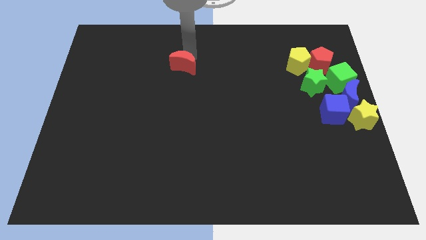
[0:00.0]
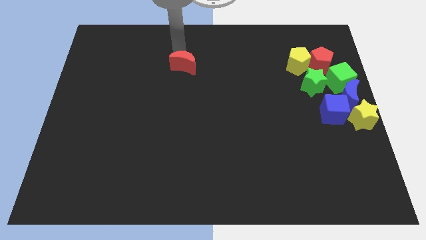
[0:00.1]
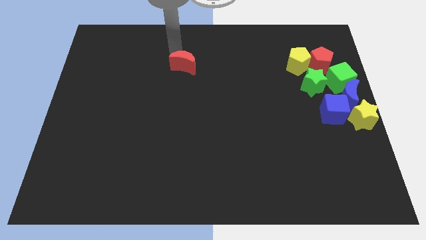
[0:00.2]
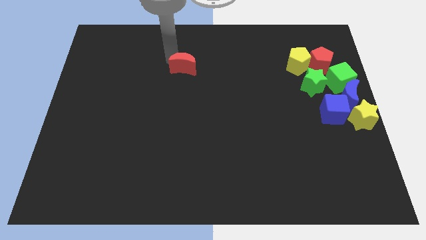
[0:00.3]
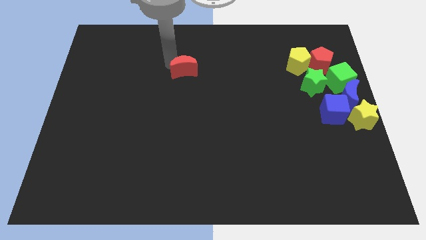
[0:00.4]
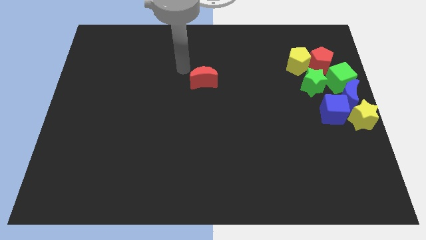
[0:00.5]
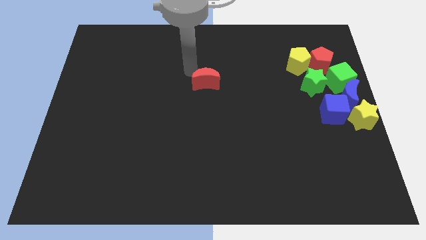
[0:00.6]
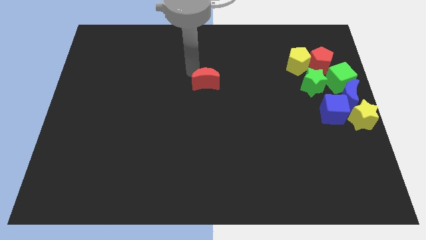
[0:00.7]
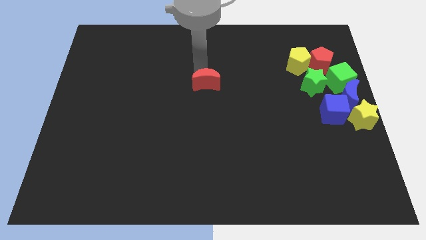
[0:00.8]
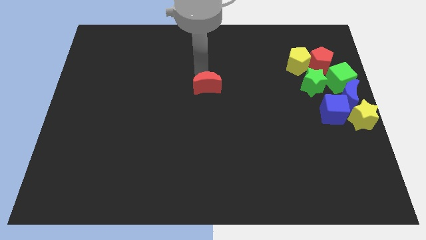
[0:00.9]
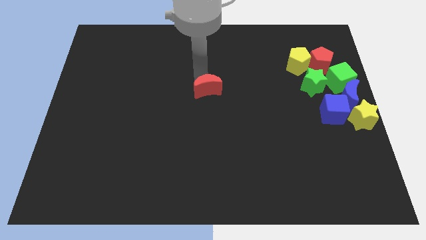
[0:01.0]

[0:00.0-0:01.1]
move the red moon to the center

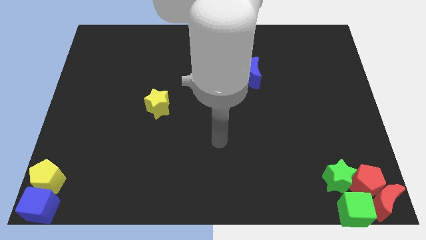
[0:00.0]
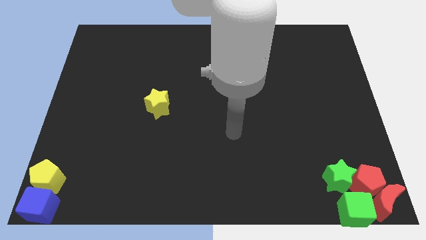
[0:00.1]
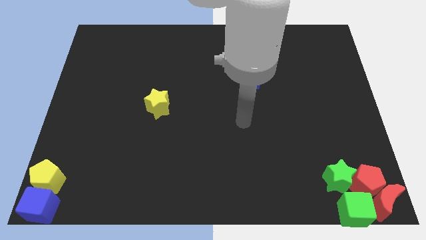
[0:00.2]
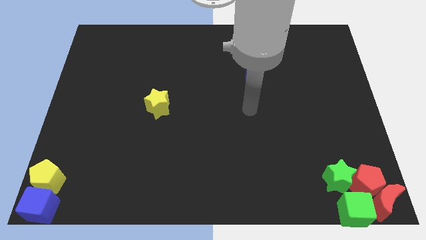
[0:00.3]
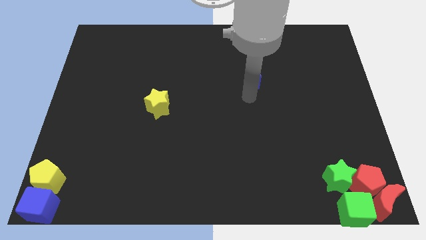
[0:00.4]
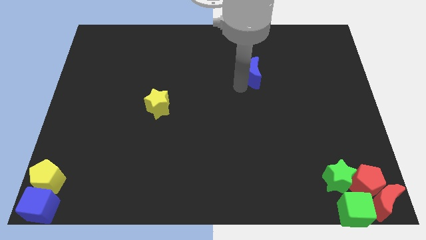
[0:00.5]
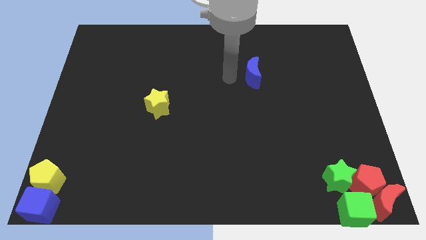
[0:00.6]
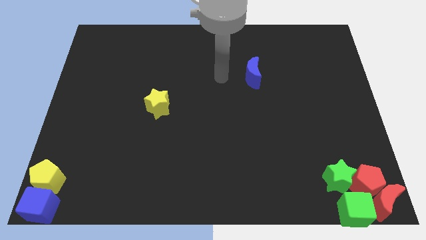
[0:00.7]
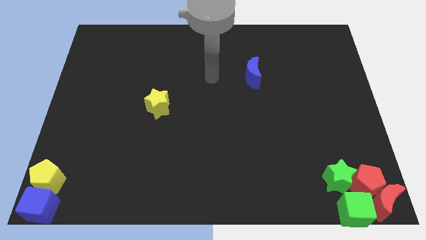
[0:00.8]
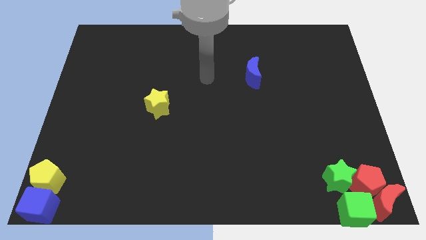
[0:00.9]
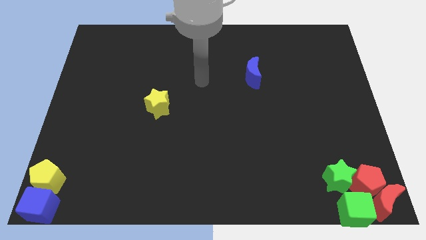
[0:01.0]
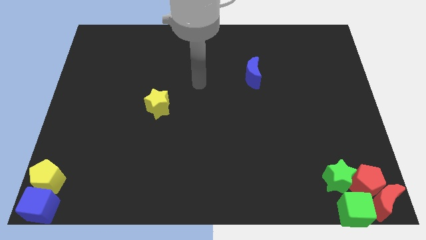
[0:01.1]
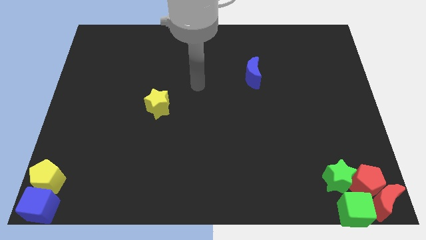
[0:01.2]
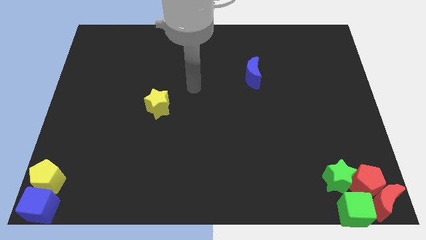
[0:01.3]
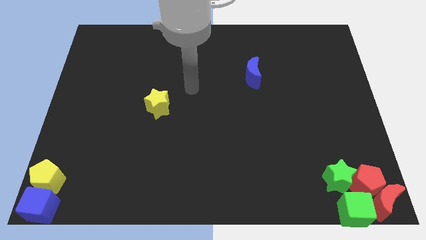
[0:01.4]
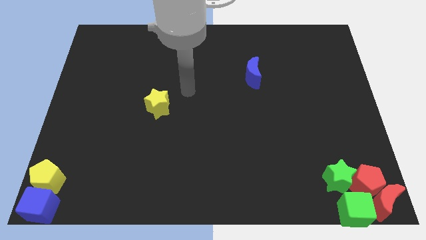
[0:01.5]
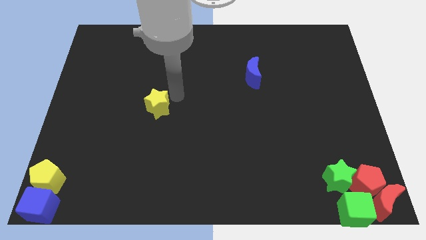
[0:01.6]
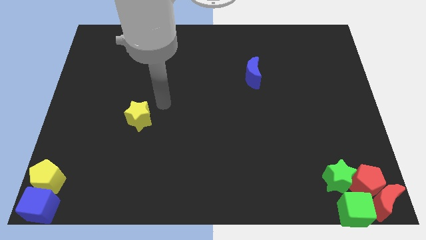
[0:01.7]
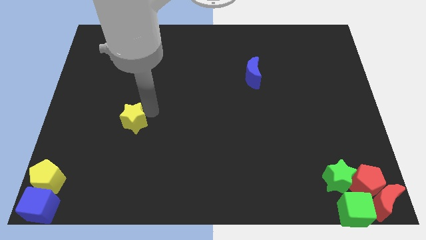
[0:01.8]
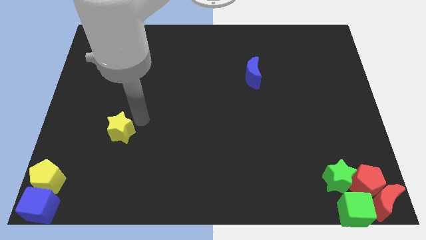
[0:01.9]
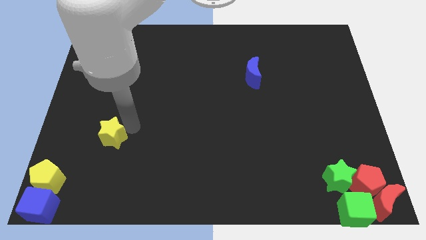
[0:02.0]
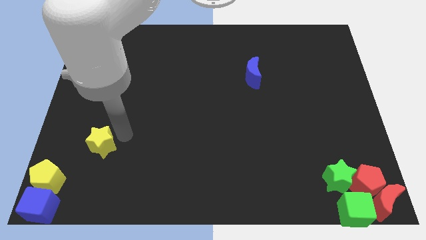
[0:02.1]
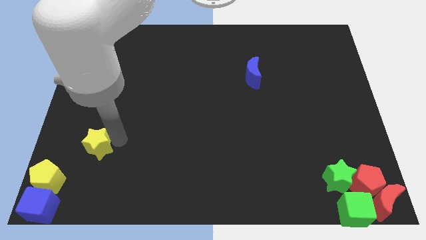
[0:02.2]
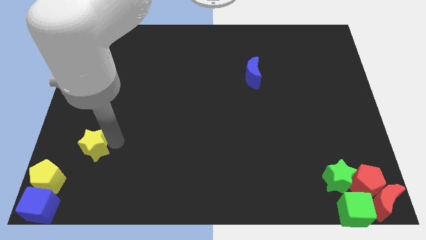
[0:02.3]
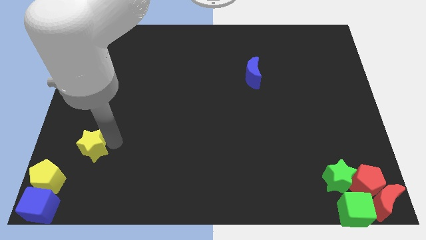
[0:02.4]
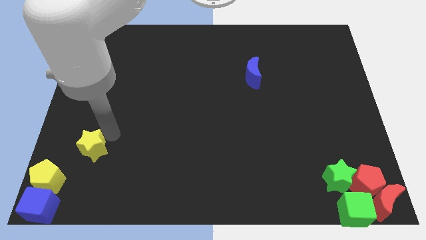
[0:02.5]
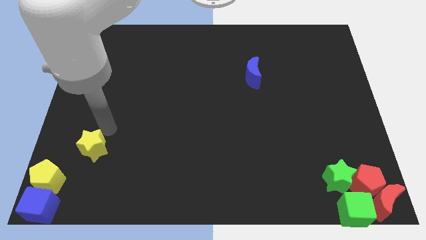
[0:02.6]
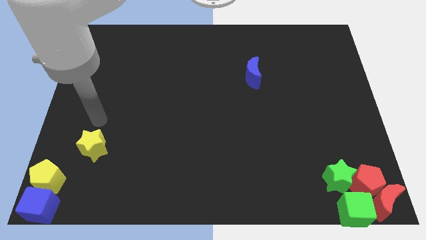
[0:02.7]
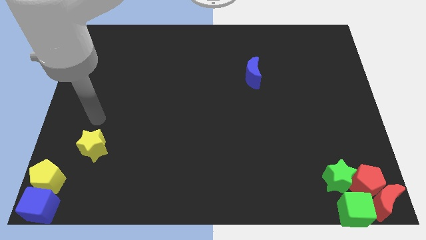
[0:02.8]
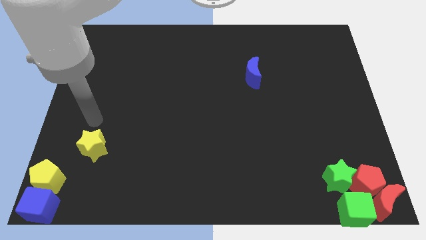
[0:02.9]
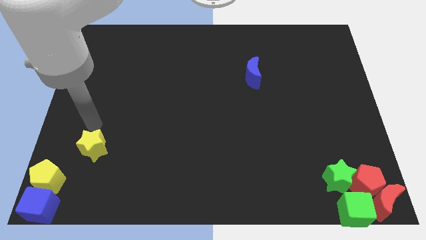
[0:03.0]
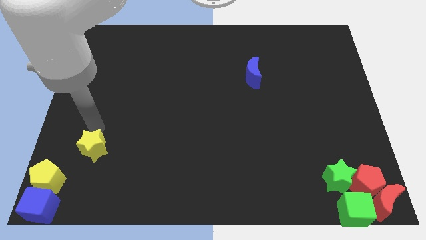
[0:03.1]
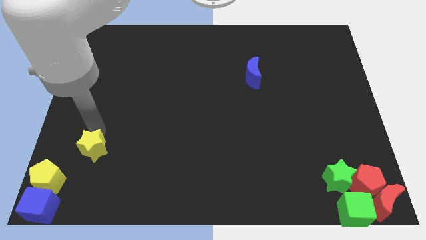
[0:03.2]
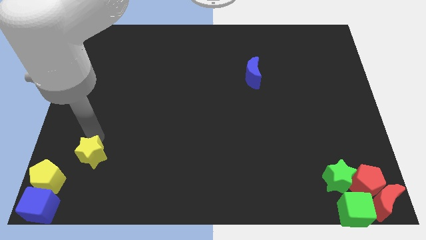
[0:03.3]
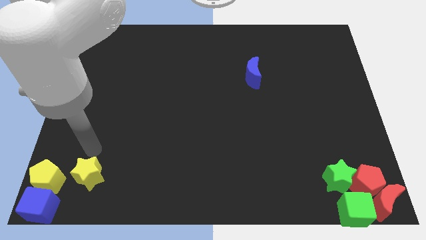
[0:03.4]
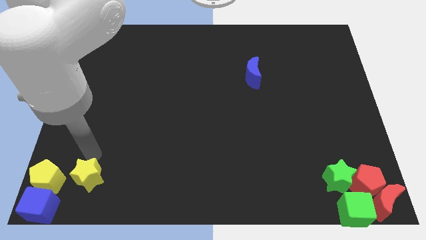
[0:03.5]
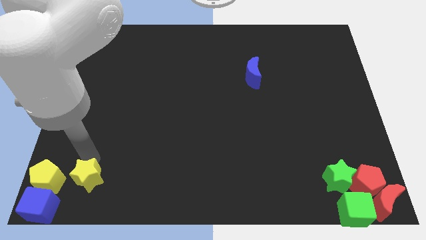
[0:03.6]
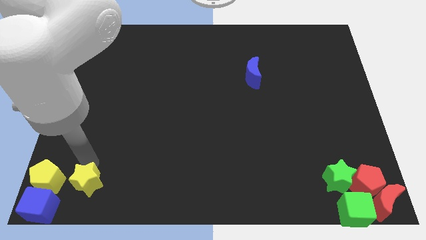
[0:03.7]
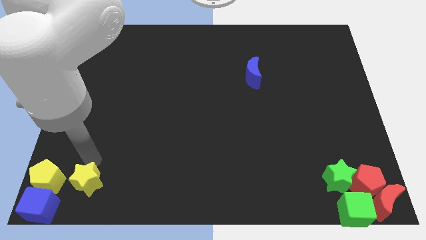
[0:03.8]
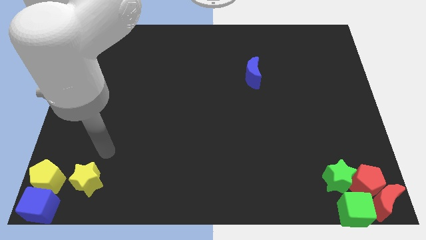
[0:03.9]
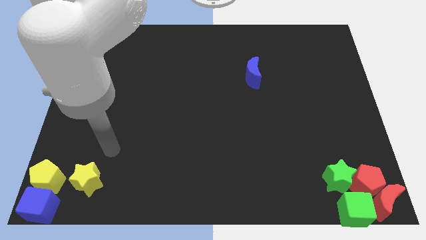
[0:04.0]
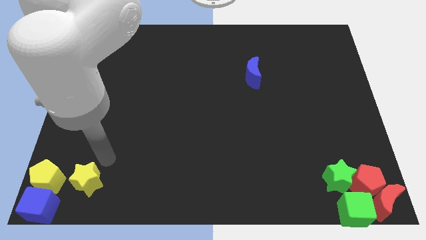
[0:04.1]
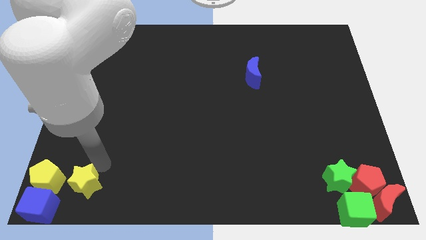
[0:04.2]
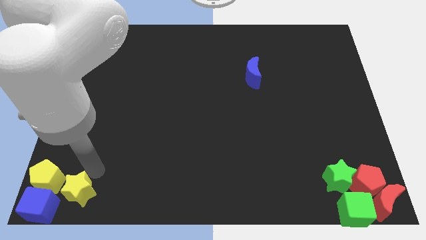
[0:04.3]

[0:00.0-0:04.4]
place the yellow star right to the yellow pentagon

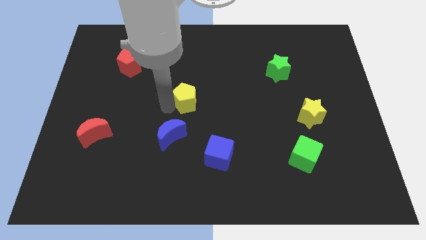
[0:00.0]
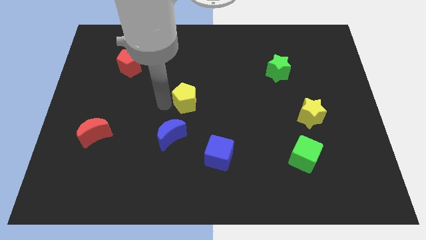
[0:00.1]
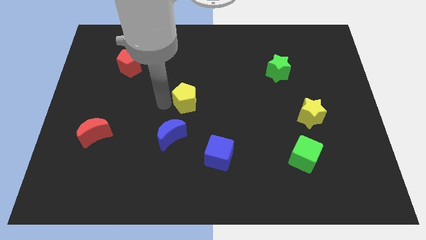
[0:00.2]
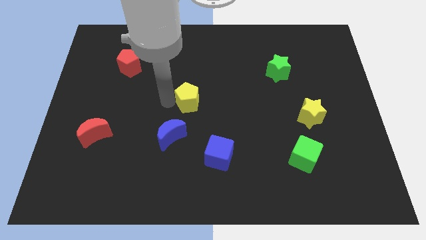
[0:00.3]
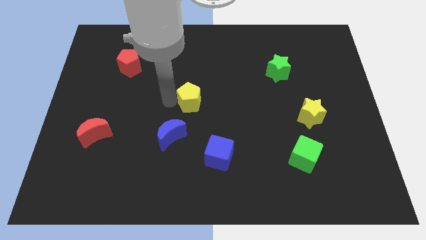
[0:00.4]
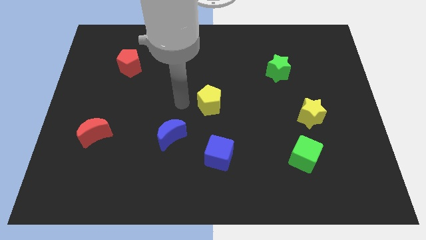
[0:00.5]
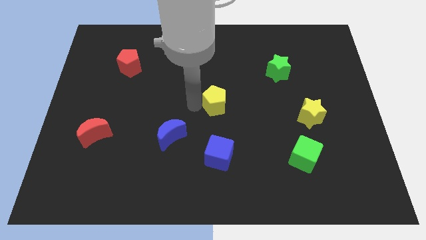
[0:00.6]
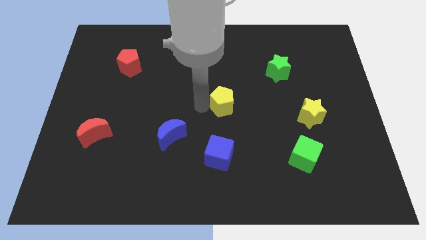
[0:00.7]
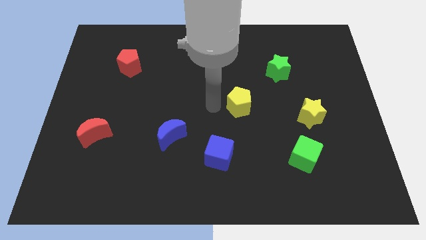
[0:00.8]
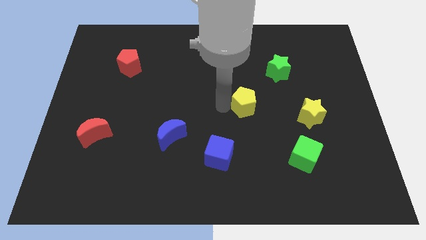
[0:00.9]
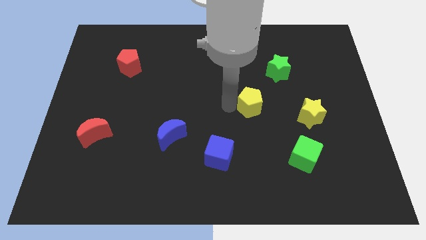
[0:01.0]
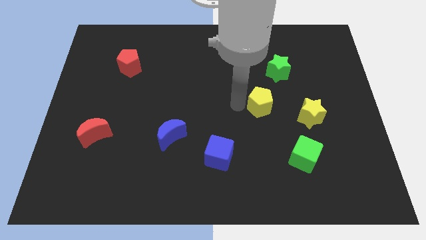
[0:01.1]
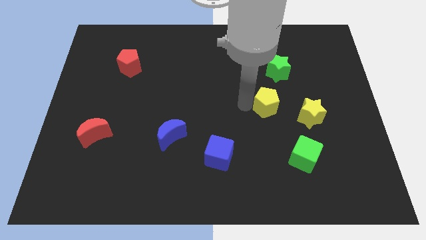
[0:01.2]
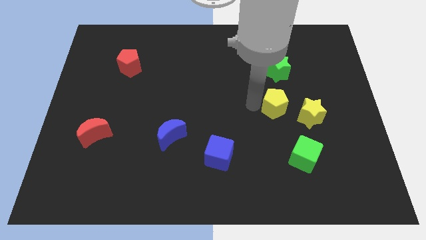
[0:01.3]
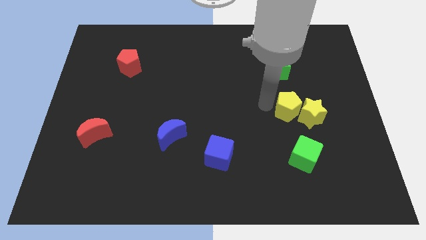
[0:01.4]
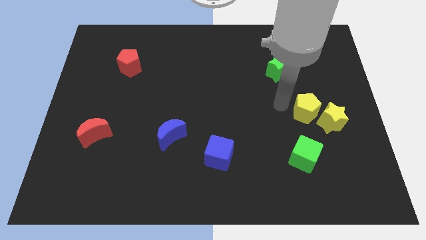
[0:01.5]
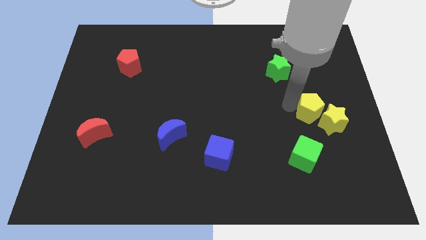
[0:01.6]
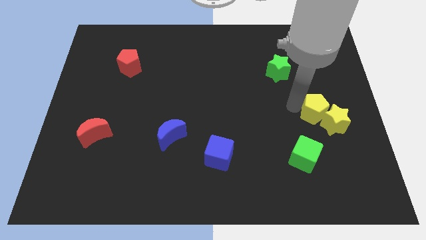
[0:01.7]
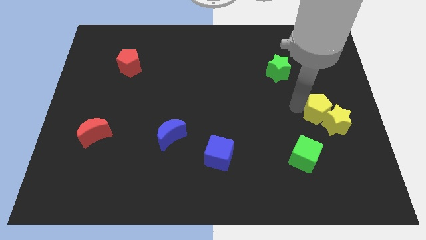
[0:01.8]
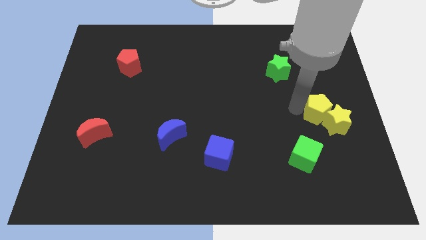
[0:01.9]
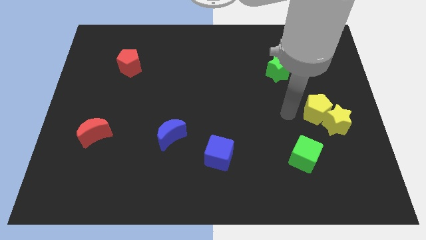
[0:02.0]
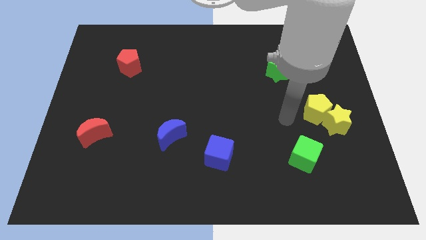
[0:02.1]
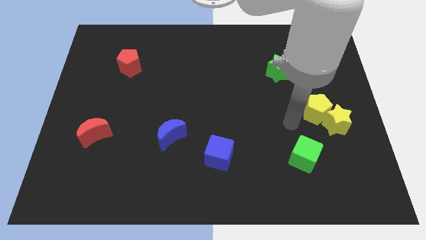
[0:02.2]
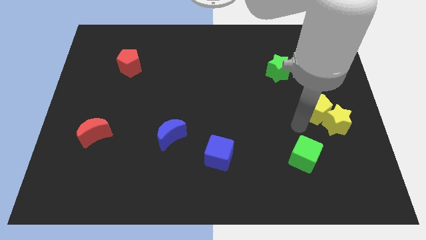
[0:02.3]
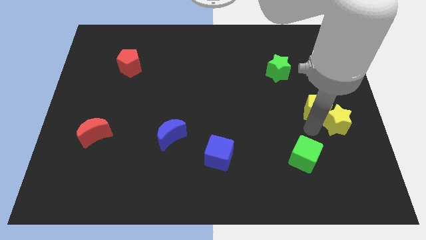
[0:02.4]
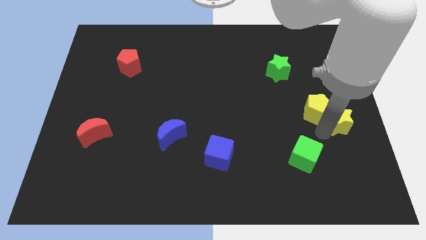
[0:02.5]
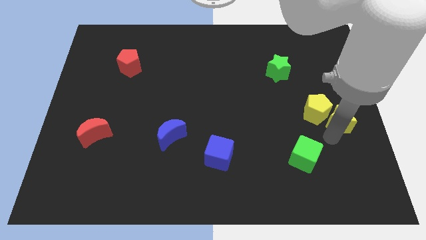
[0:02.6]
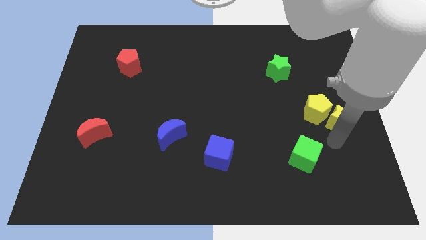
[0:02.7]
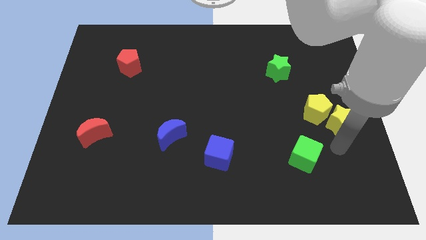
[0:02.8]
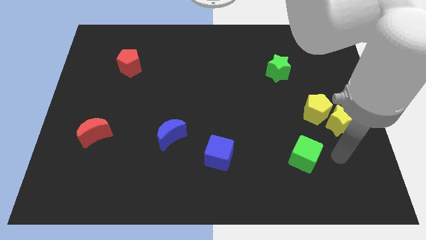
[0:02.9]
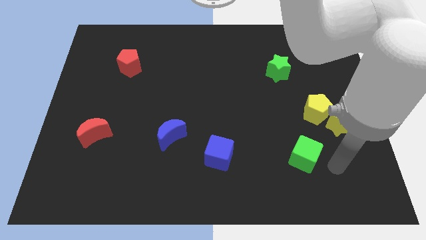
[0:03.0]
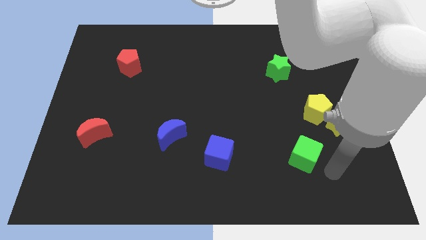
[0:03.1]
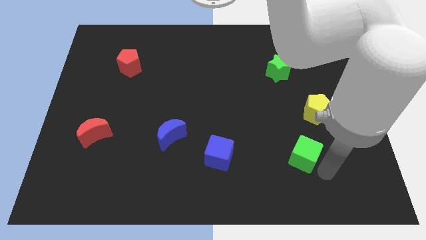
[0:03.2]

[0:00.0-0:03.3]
push the yellow pentagon into the yellow star

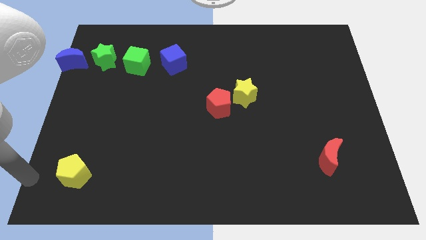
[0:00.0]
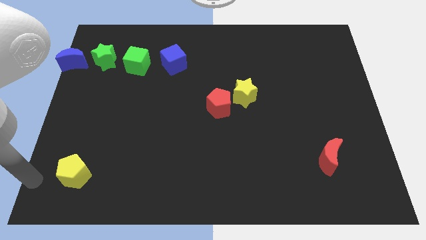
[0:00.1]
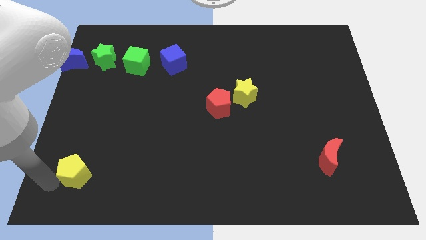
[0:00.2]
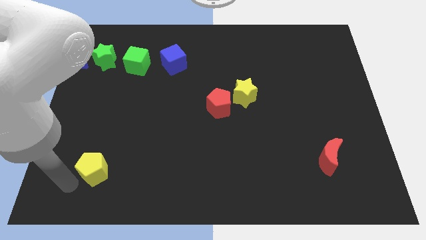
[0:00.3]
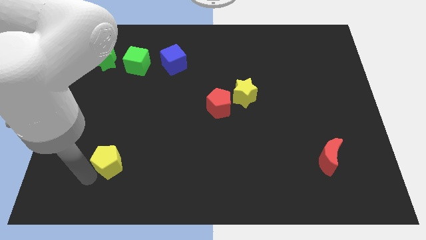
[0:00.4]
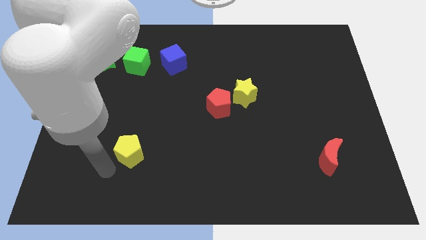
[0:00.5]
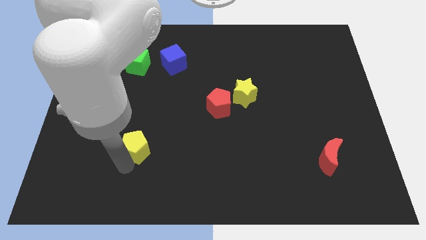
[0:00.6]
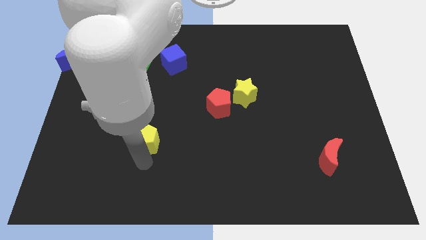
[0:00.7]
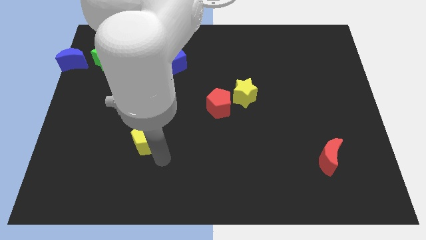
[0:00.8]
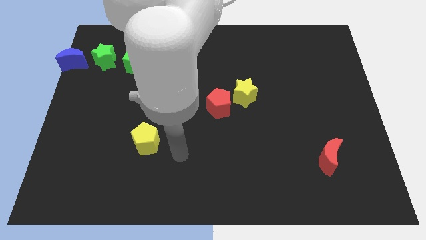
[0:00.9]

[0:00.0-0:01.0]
place the yellow pentagon diagonally to red pentagon
